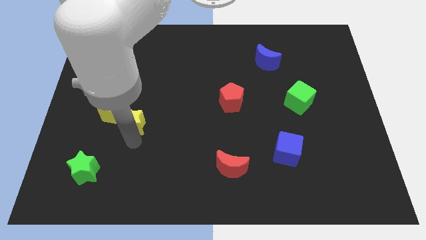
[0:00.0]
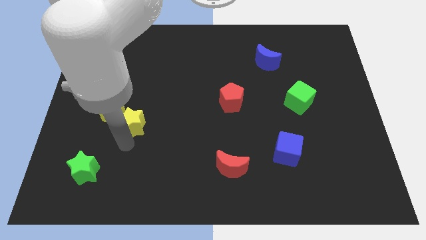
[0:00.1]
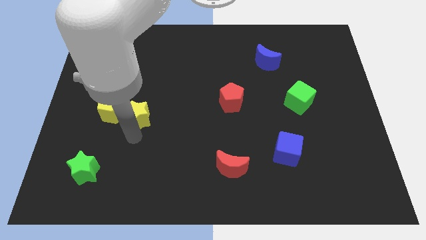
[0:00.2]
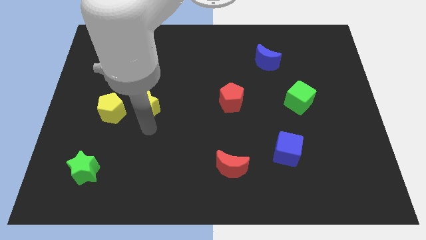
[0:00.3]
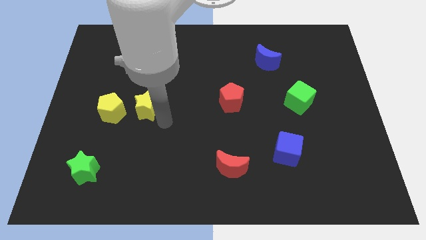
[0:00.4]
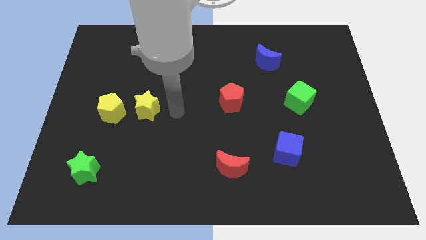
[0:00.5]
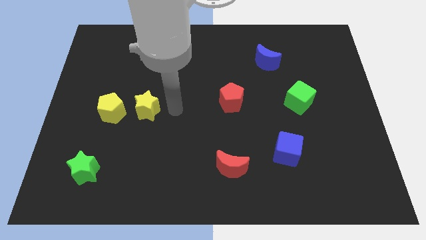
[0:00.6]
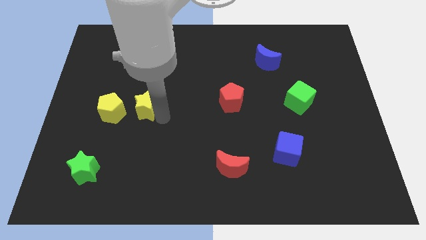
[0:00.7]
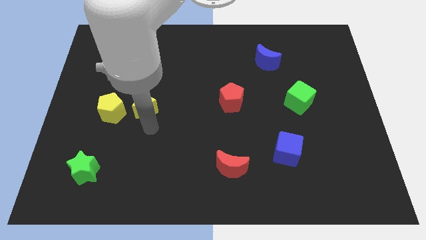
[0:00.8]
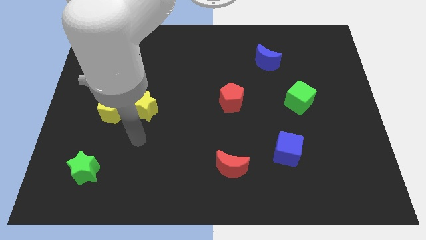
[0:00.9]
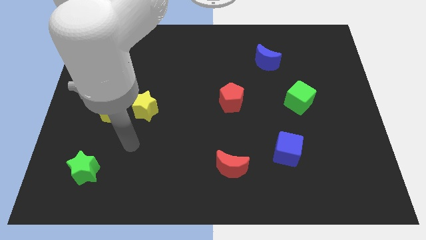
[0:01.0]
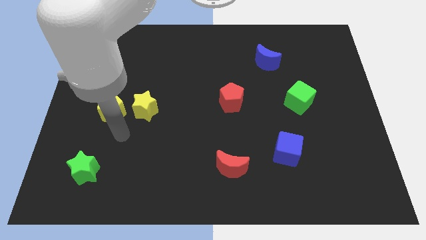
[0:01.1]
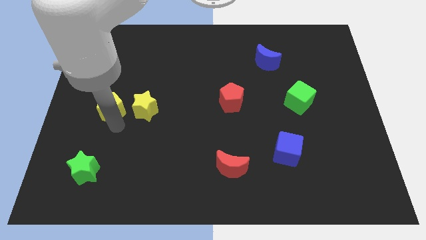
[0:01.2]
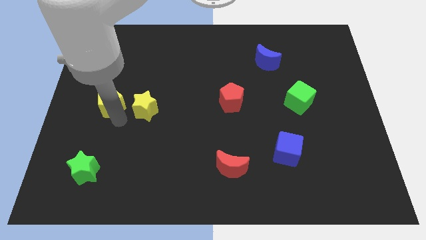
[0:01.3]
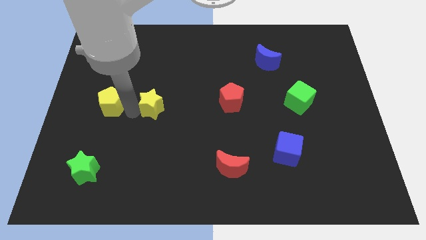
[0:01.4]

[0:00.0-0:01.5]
push the yellow star adjacent to the yellow pentagon

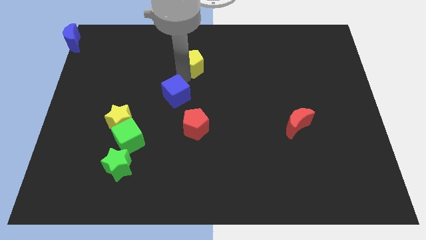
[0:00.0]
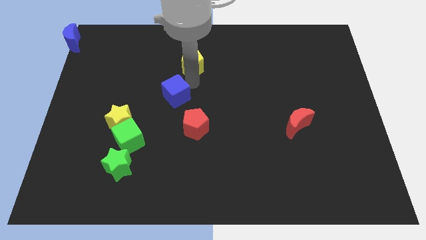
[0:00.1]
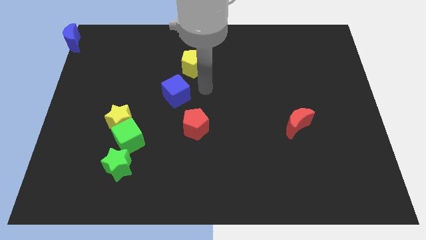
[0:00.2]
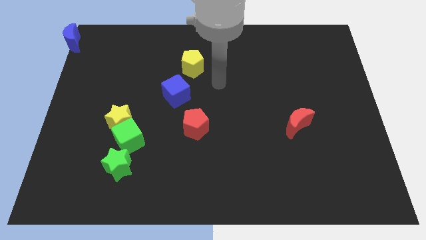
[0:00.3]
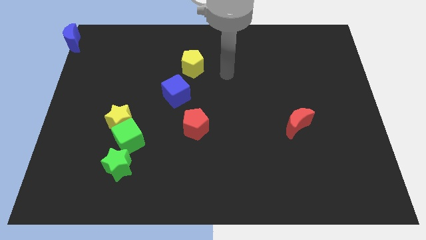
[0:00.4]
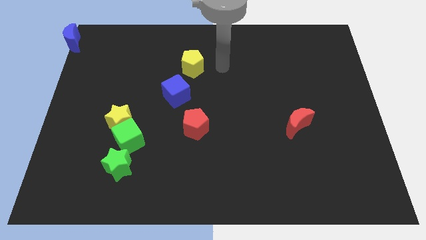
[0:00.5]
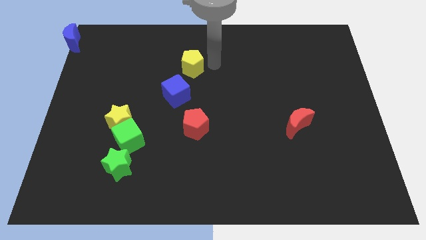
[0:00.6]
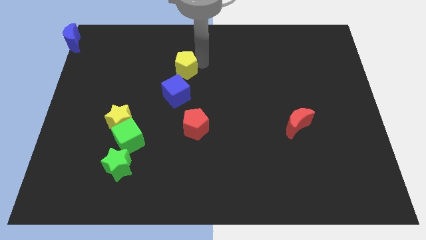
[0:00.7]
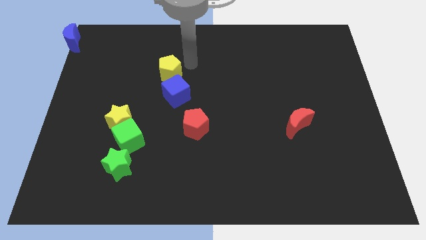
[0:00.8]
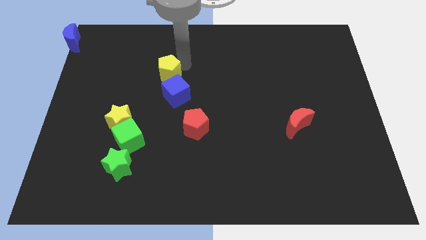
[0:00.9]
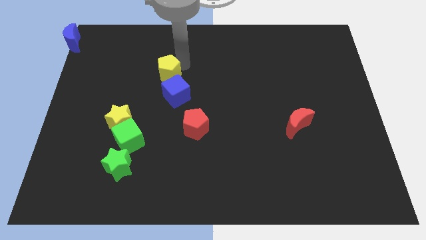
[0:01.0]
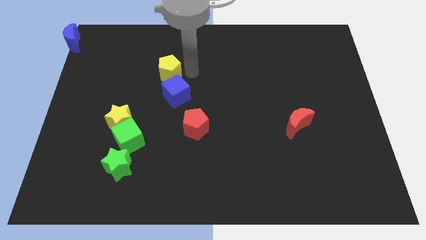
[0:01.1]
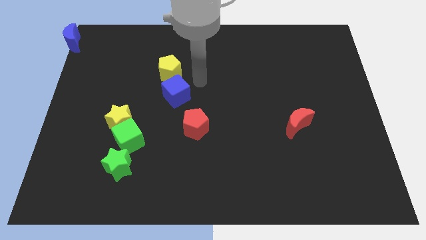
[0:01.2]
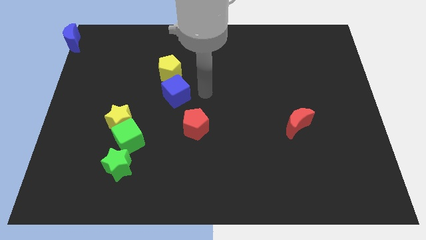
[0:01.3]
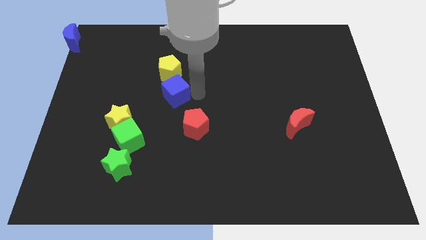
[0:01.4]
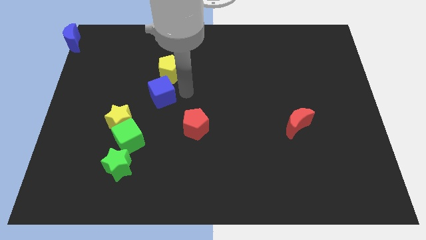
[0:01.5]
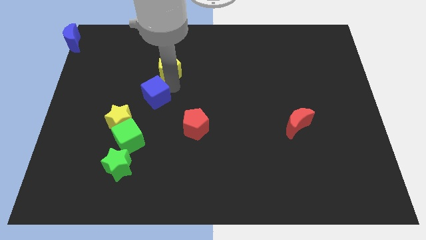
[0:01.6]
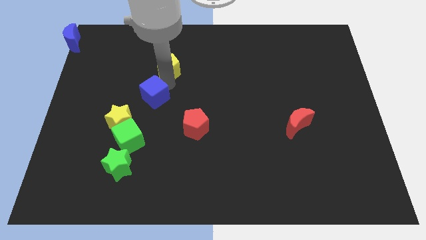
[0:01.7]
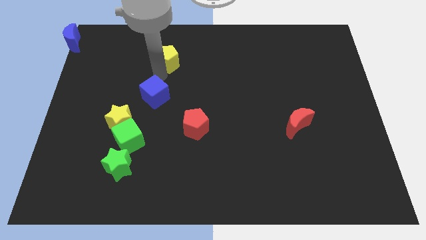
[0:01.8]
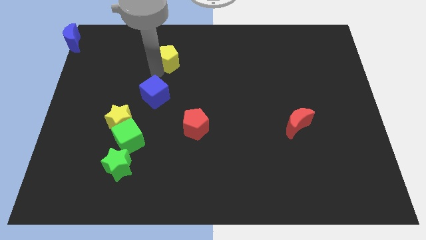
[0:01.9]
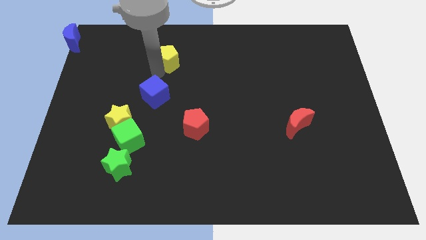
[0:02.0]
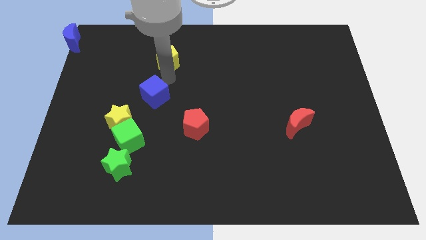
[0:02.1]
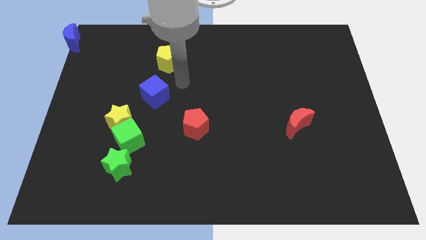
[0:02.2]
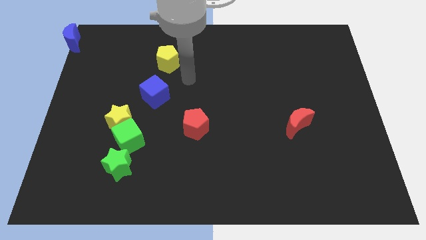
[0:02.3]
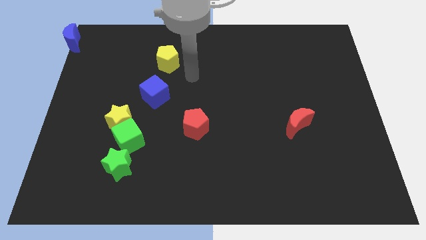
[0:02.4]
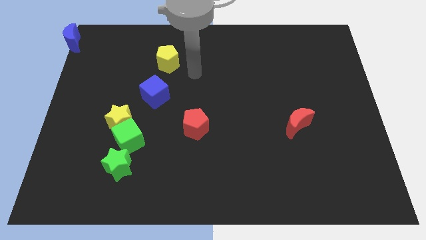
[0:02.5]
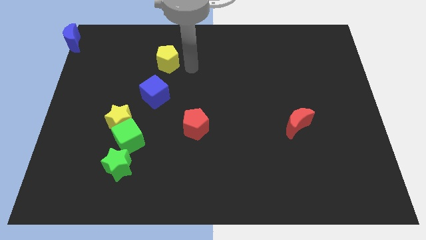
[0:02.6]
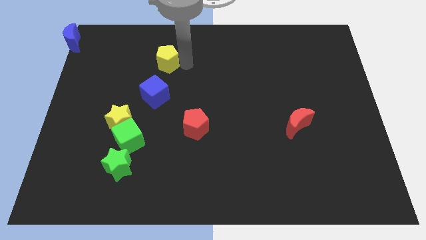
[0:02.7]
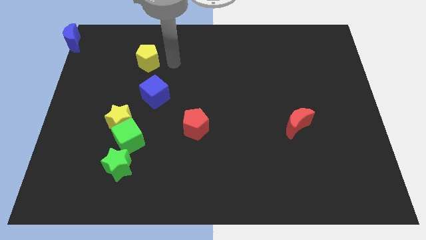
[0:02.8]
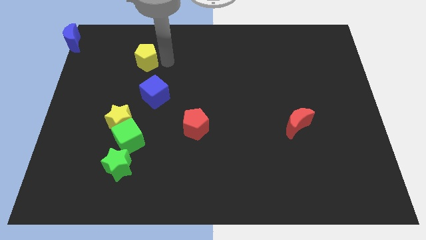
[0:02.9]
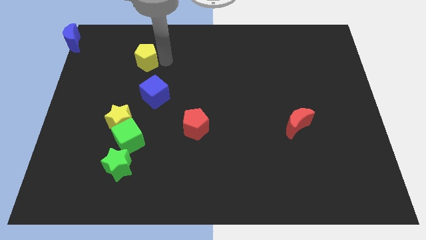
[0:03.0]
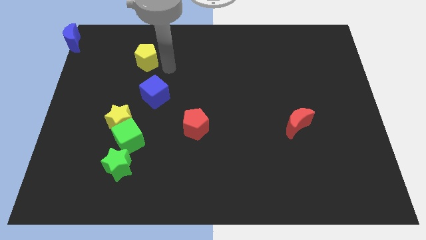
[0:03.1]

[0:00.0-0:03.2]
push the blue cube and yellow pentagon towards the left side of the board

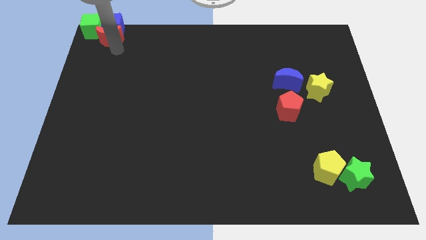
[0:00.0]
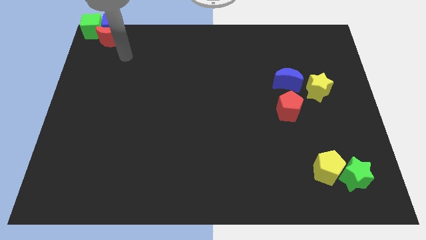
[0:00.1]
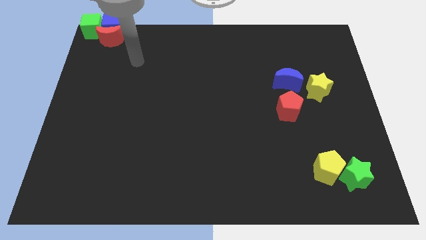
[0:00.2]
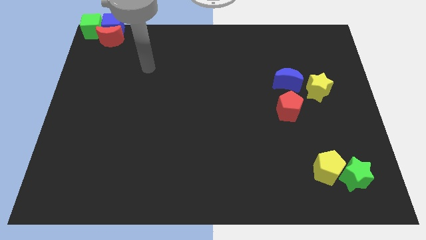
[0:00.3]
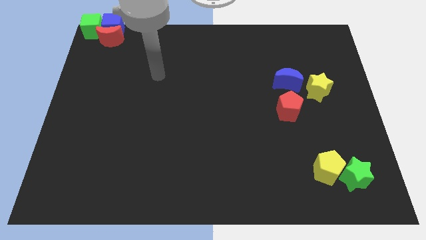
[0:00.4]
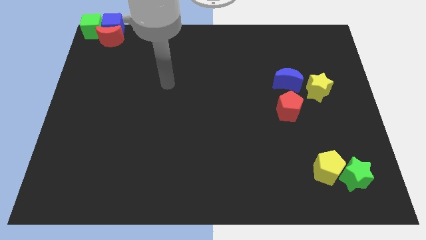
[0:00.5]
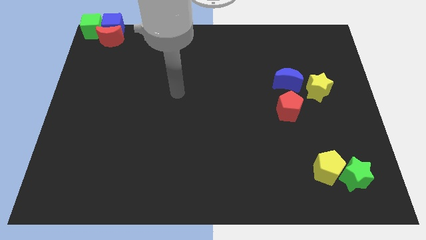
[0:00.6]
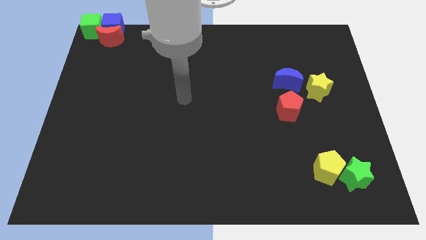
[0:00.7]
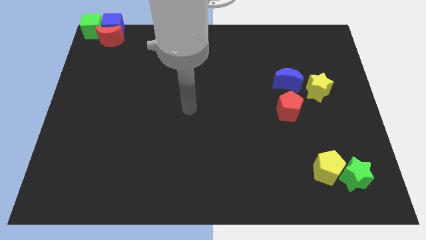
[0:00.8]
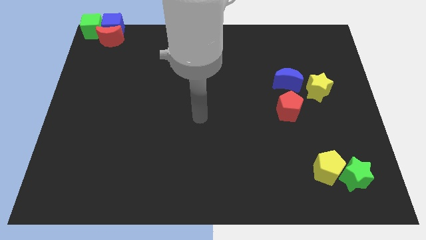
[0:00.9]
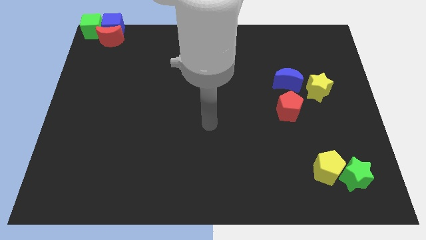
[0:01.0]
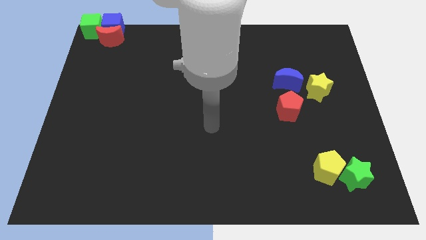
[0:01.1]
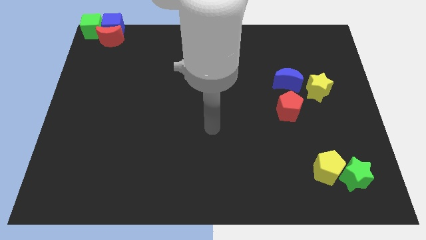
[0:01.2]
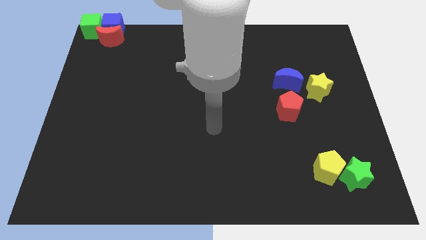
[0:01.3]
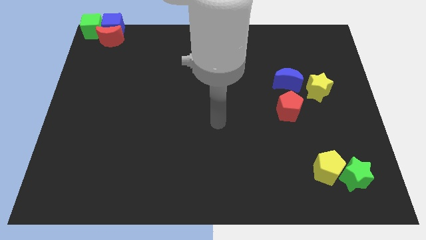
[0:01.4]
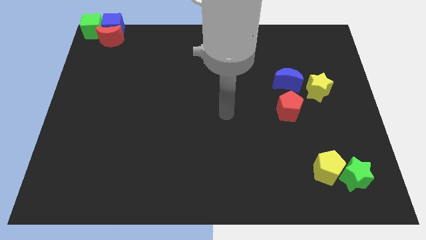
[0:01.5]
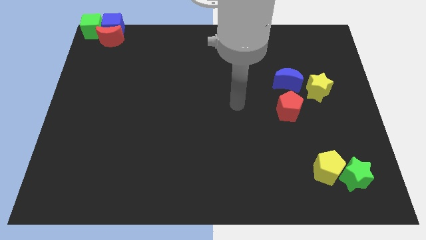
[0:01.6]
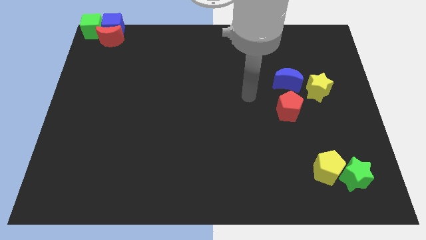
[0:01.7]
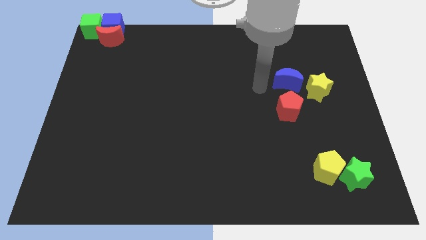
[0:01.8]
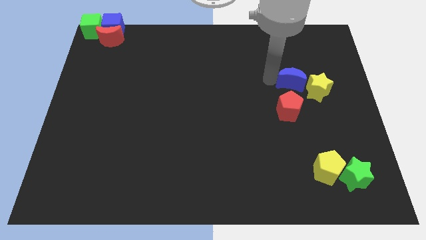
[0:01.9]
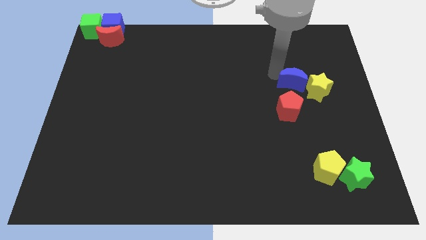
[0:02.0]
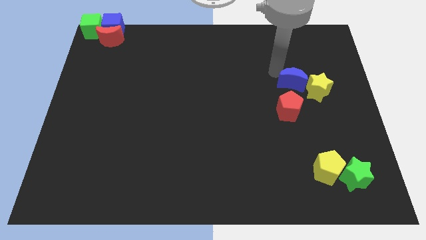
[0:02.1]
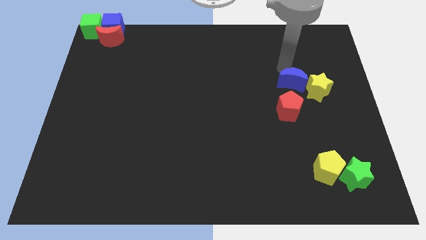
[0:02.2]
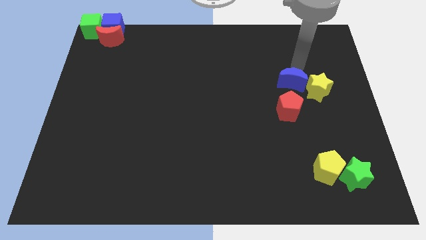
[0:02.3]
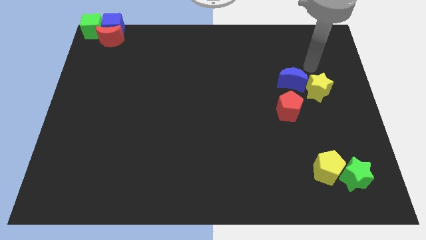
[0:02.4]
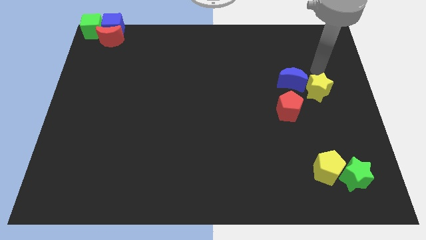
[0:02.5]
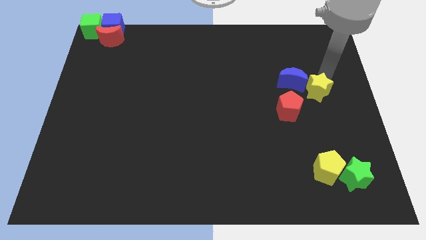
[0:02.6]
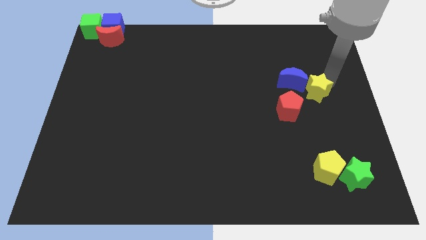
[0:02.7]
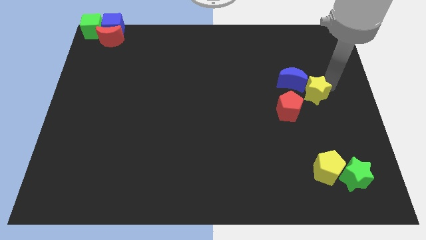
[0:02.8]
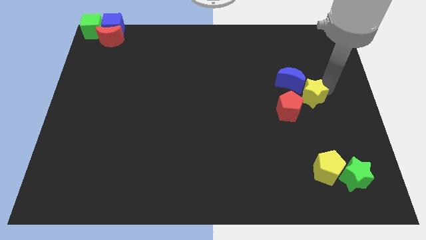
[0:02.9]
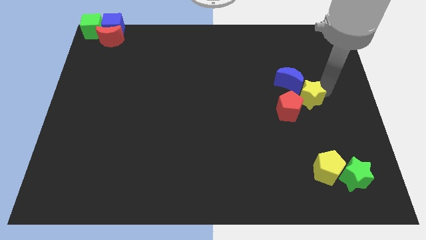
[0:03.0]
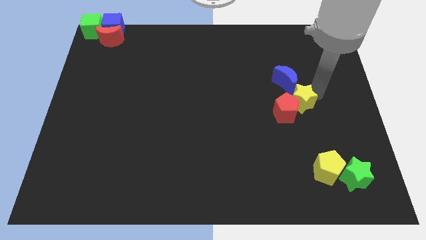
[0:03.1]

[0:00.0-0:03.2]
push yellow star into red pentagon

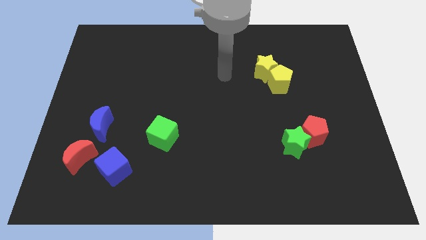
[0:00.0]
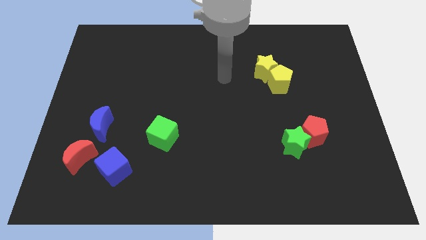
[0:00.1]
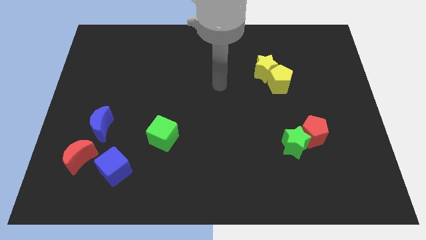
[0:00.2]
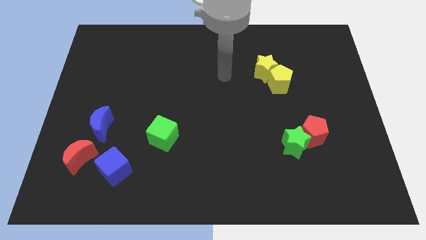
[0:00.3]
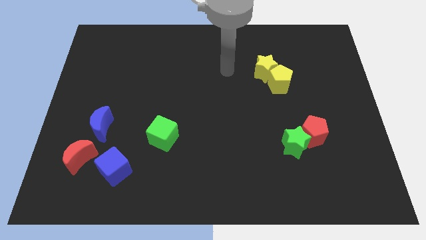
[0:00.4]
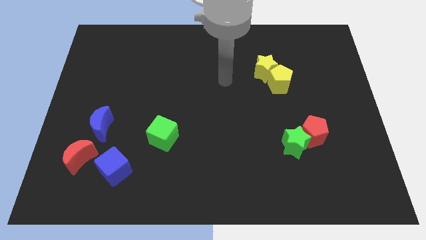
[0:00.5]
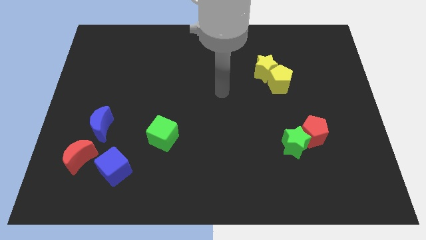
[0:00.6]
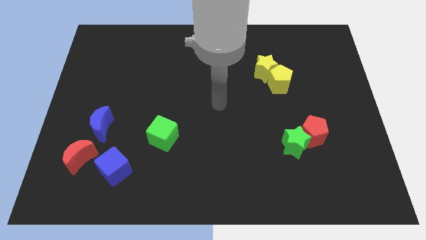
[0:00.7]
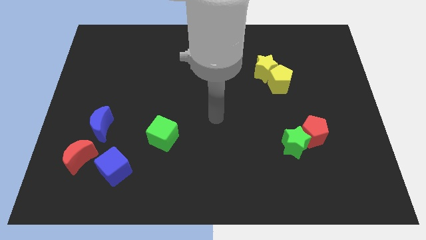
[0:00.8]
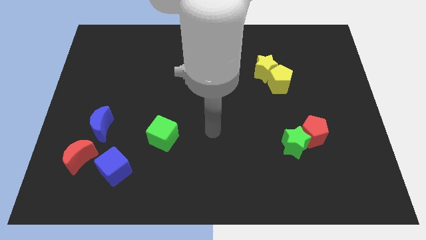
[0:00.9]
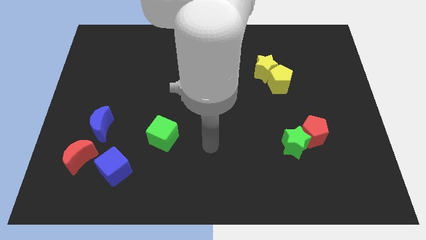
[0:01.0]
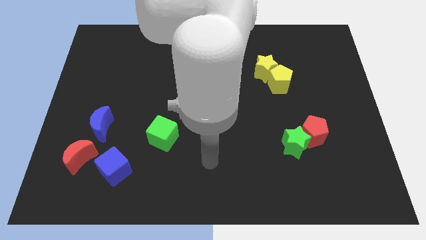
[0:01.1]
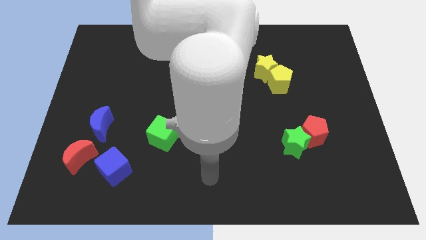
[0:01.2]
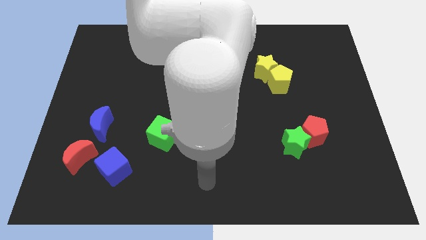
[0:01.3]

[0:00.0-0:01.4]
place arm in the bottom center
